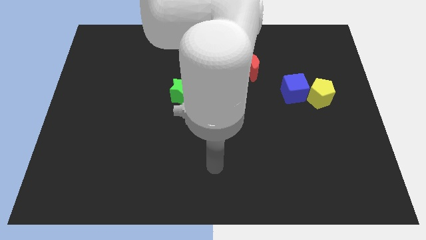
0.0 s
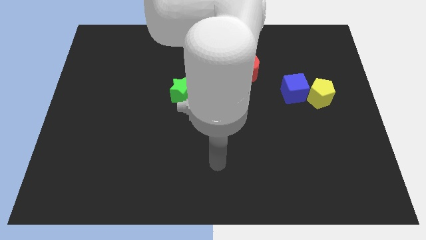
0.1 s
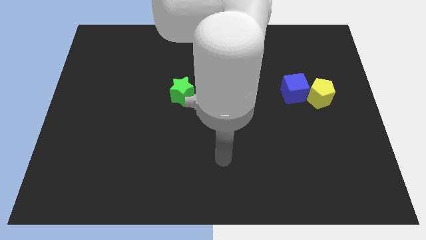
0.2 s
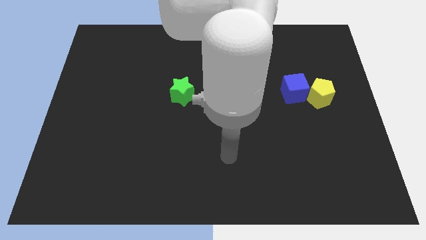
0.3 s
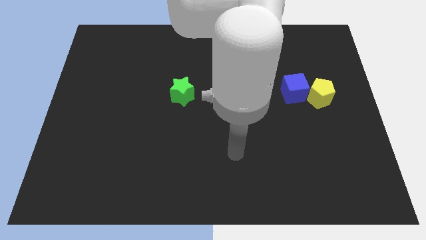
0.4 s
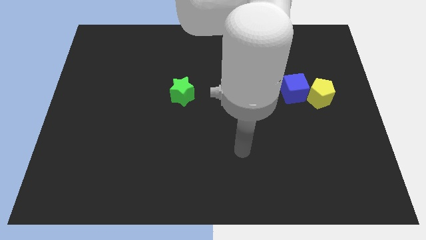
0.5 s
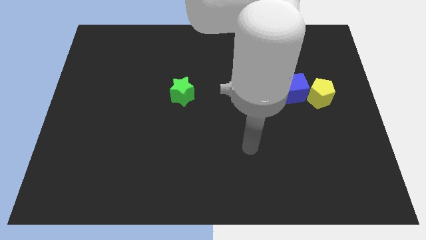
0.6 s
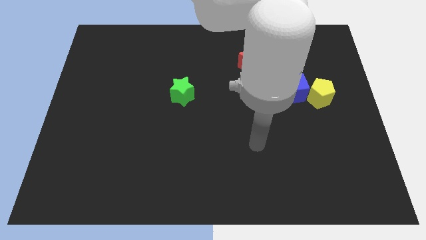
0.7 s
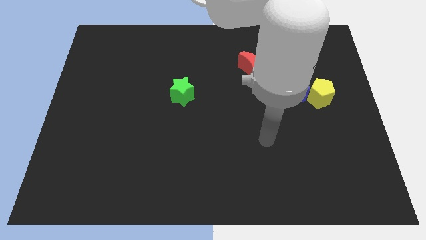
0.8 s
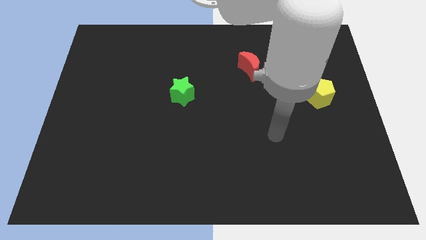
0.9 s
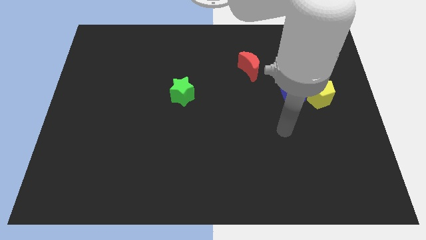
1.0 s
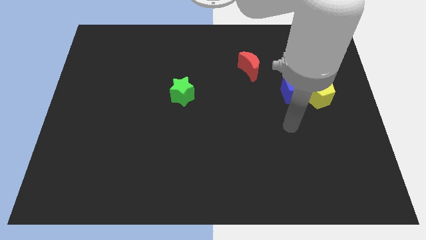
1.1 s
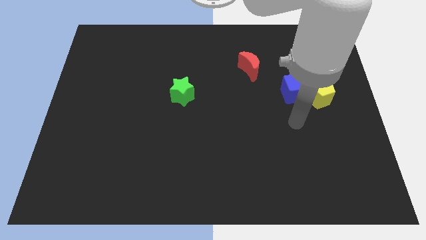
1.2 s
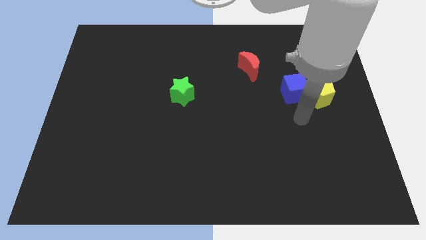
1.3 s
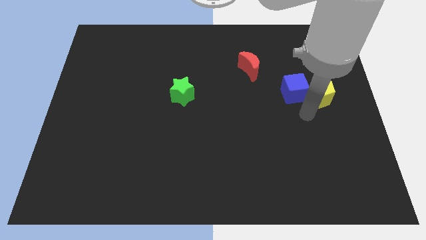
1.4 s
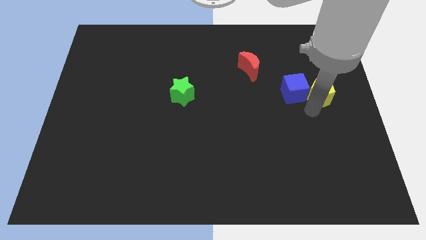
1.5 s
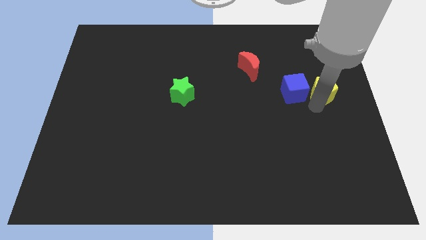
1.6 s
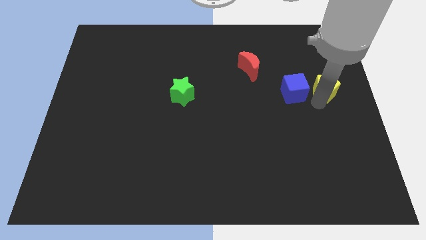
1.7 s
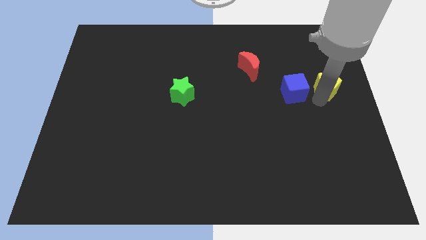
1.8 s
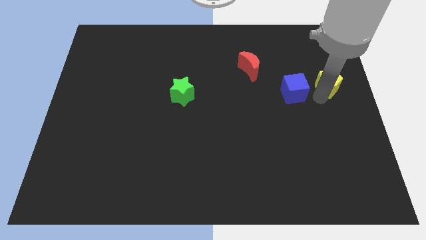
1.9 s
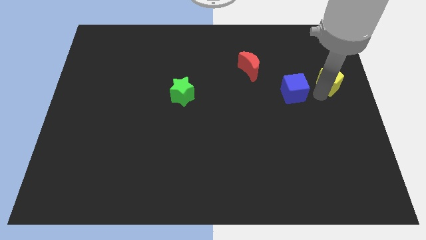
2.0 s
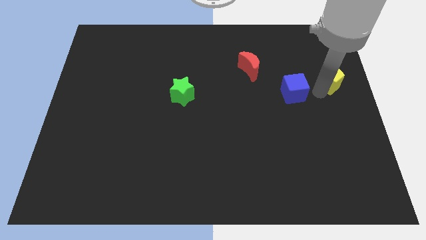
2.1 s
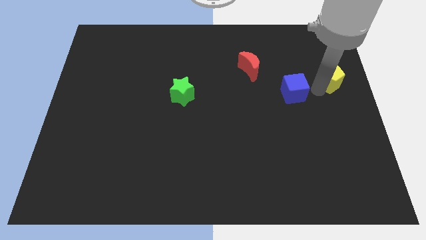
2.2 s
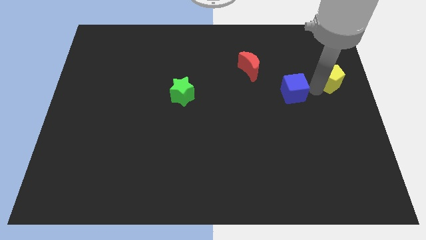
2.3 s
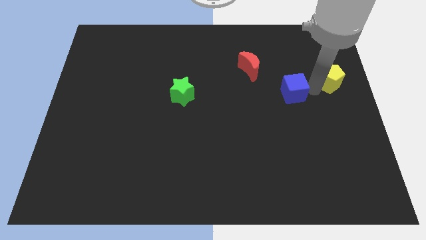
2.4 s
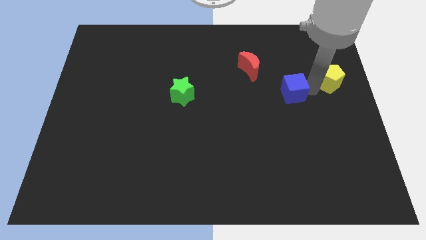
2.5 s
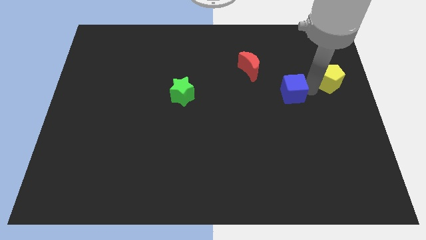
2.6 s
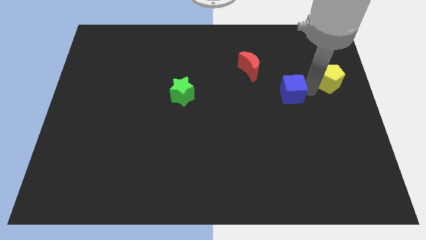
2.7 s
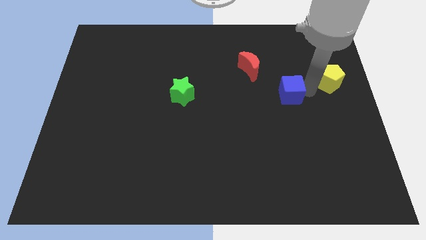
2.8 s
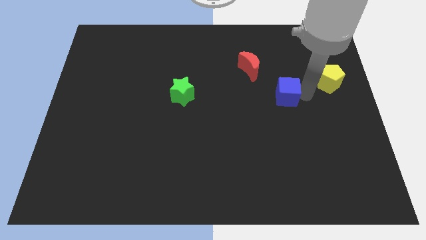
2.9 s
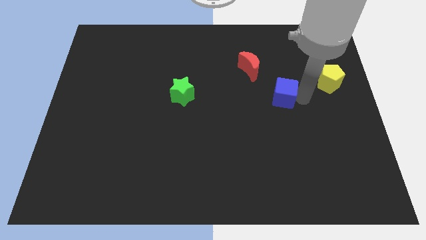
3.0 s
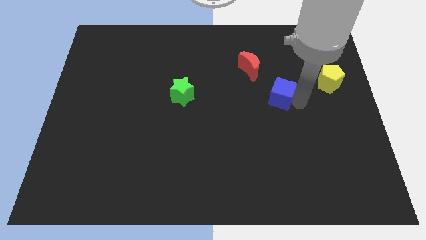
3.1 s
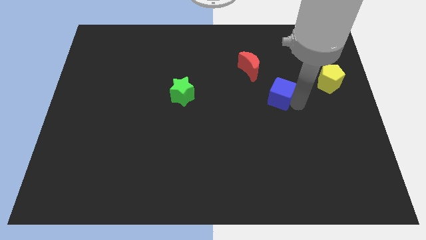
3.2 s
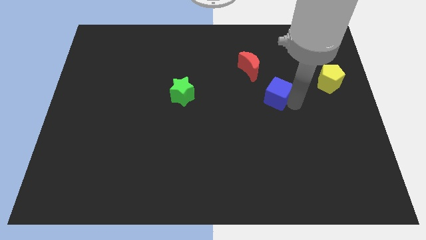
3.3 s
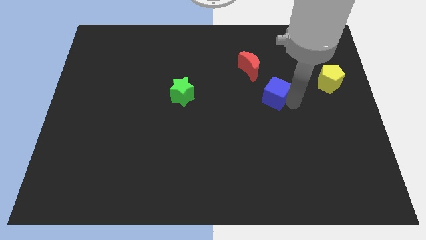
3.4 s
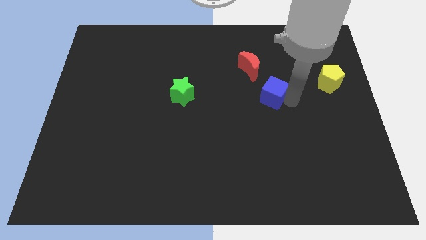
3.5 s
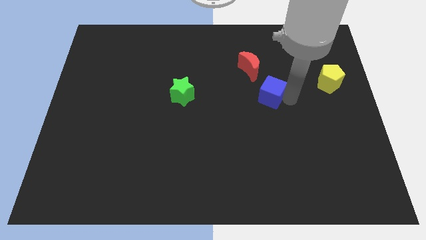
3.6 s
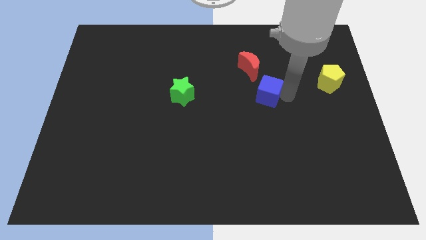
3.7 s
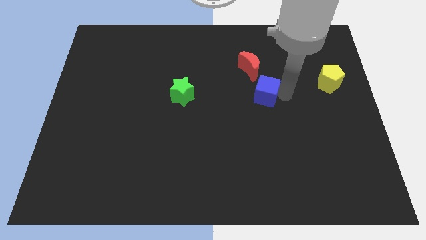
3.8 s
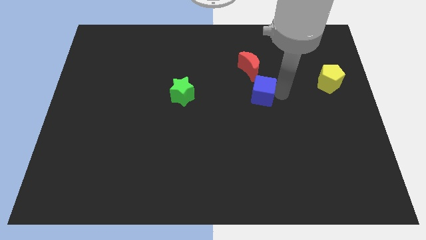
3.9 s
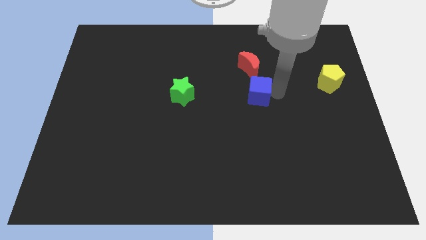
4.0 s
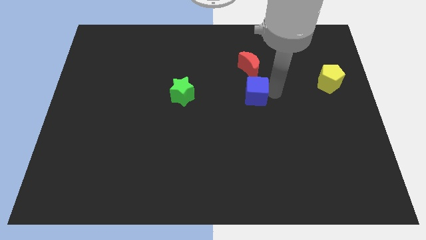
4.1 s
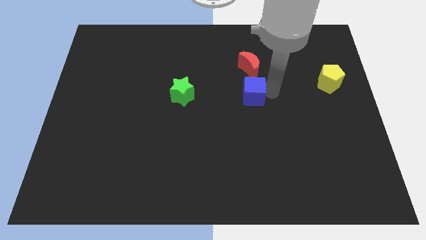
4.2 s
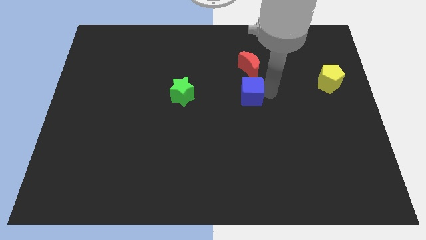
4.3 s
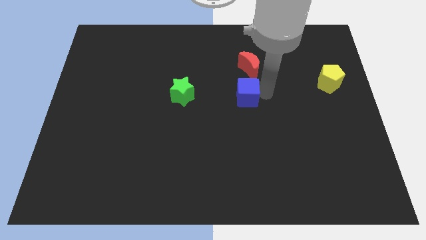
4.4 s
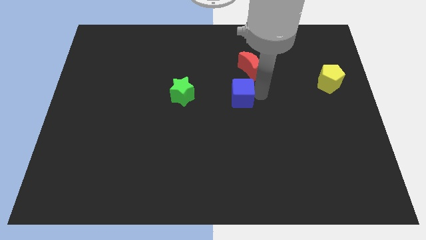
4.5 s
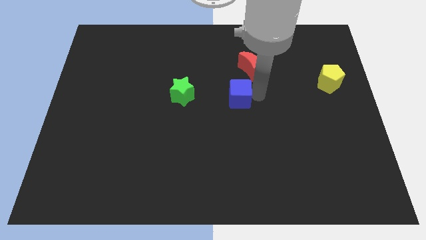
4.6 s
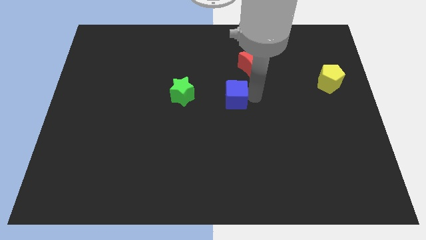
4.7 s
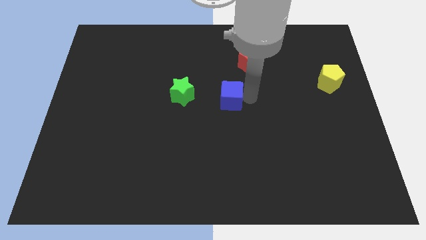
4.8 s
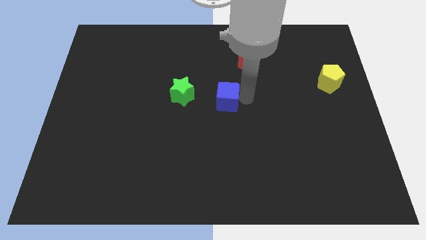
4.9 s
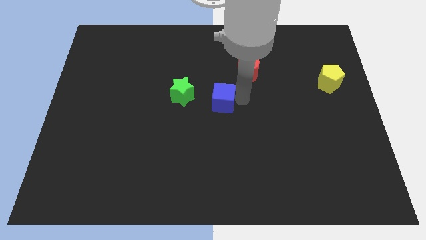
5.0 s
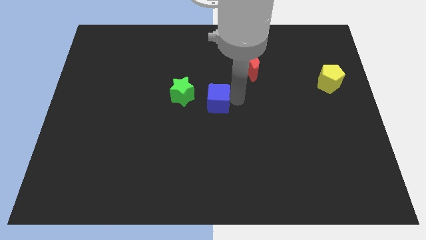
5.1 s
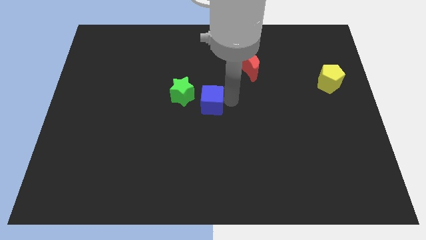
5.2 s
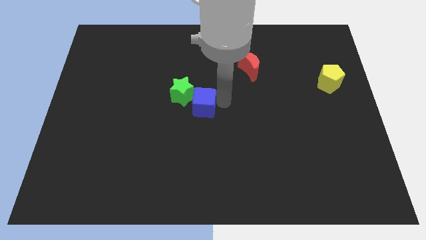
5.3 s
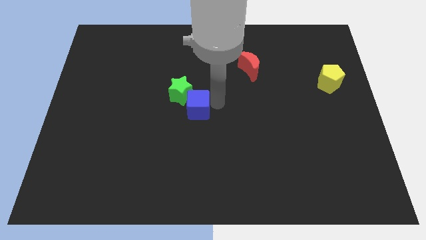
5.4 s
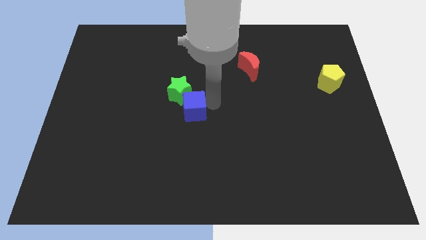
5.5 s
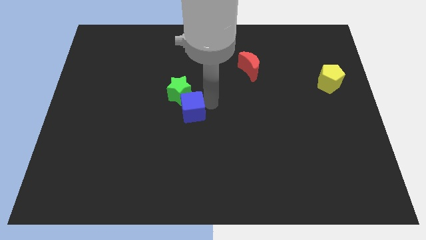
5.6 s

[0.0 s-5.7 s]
put the blue cube next to the green star

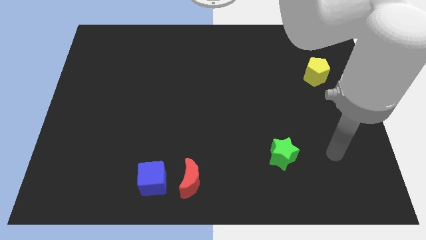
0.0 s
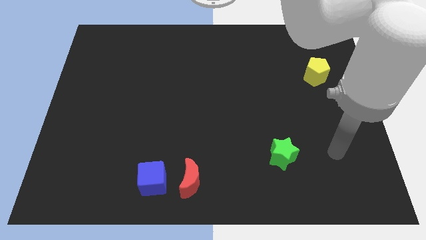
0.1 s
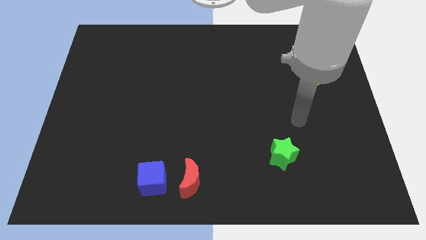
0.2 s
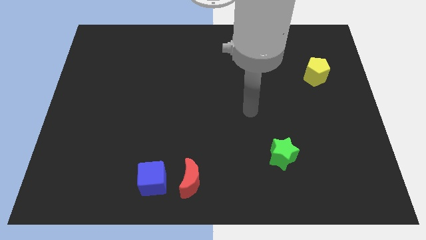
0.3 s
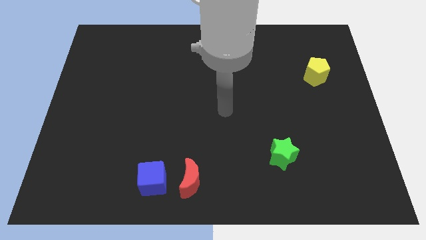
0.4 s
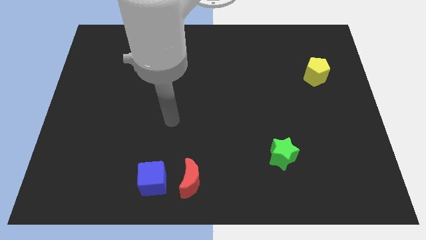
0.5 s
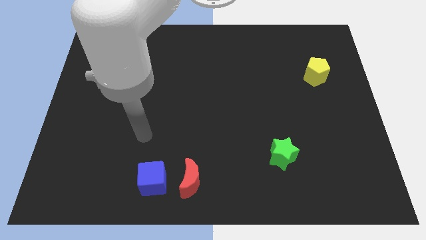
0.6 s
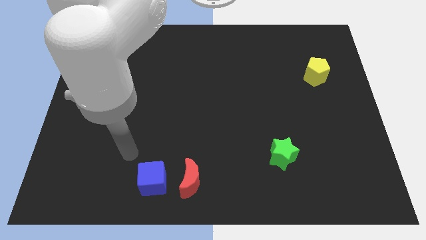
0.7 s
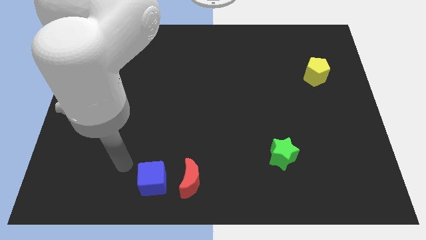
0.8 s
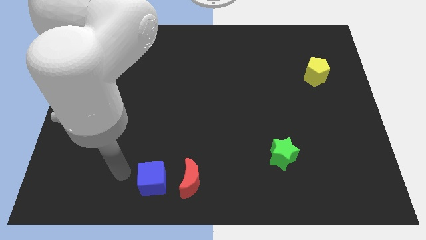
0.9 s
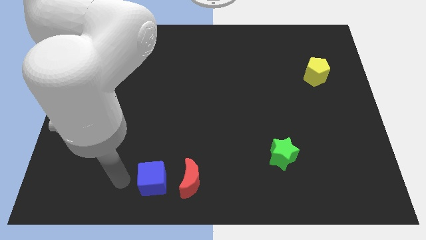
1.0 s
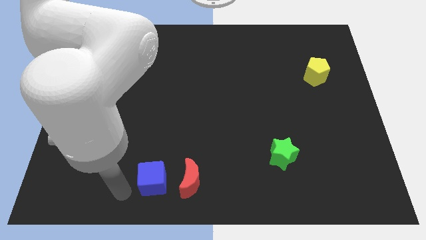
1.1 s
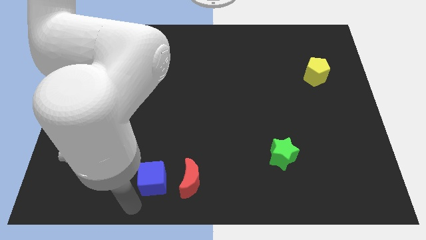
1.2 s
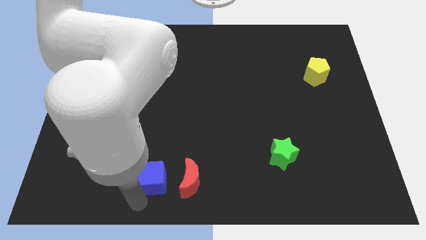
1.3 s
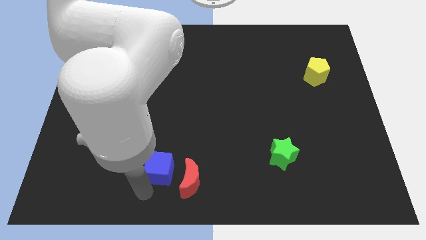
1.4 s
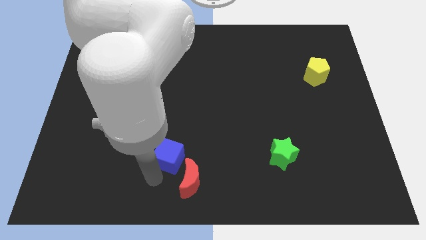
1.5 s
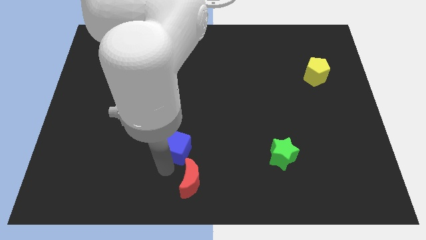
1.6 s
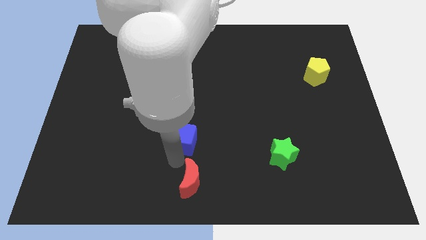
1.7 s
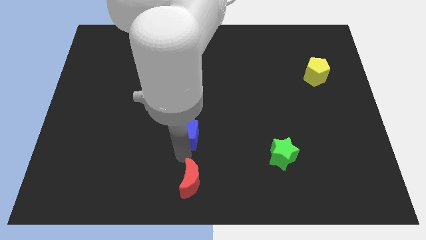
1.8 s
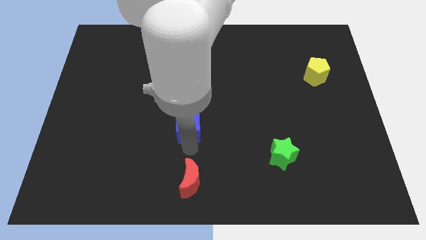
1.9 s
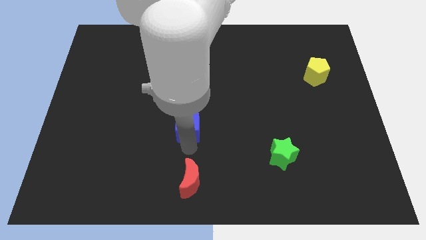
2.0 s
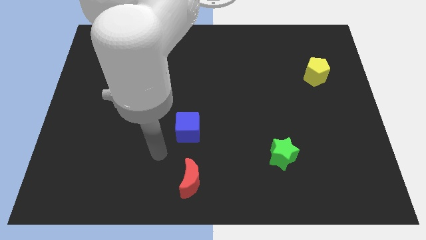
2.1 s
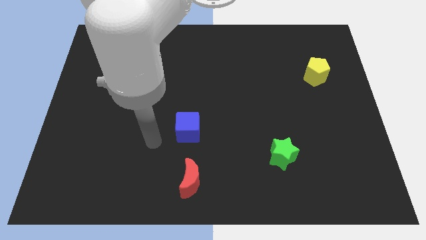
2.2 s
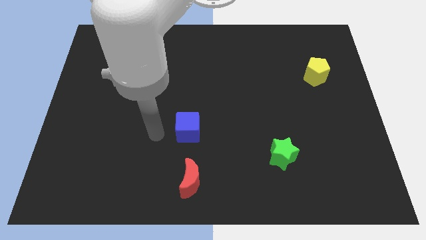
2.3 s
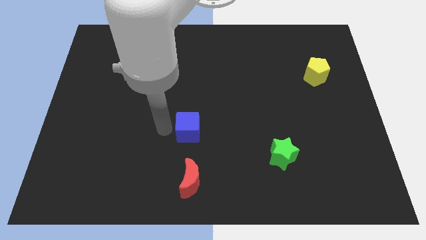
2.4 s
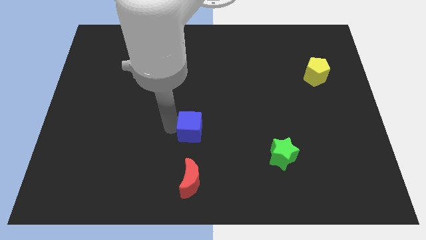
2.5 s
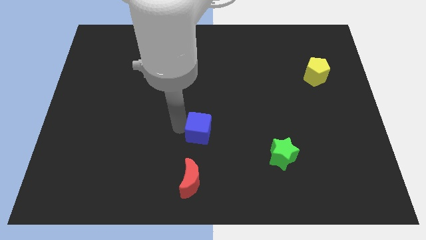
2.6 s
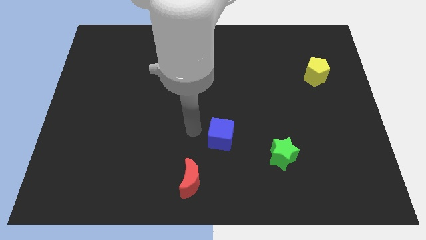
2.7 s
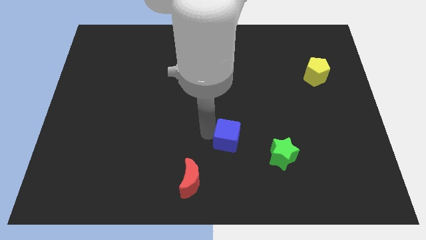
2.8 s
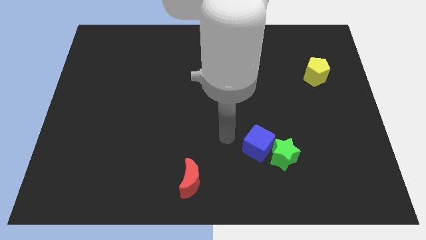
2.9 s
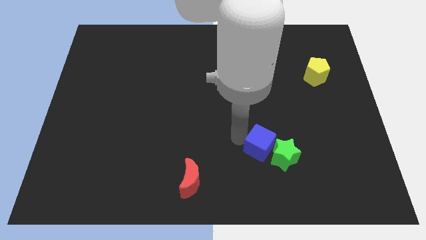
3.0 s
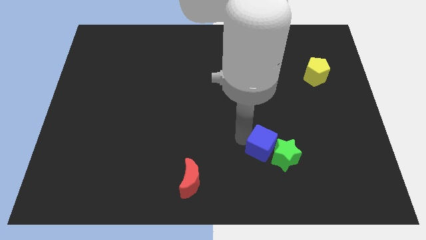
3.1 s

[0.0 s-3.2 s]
move the cube towards the green star
